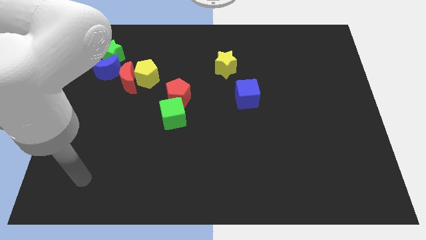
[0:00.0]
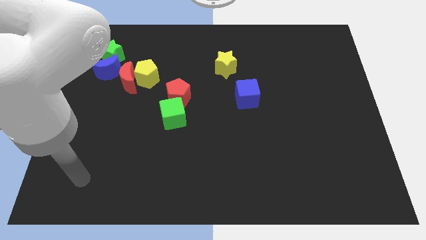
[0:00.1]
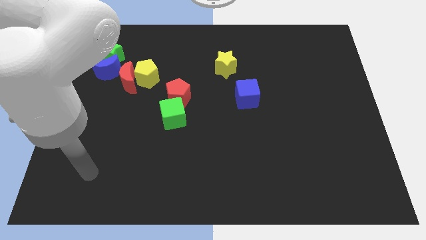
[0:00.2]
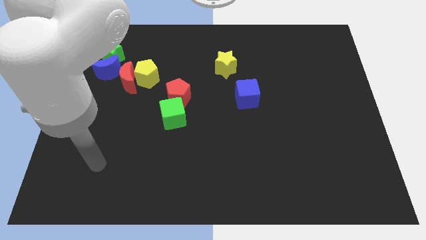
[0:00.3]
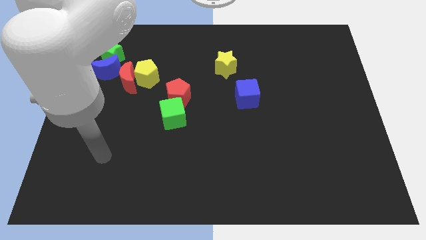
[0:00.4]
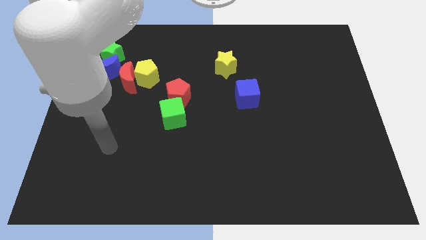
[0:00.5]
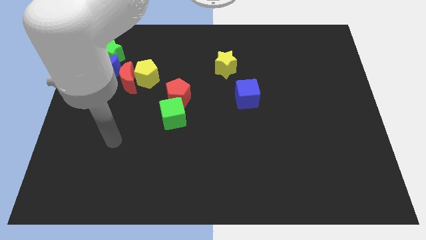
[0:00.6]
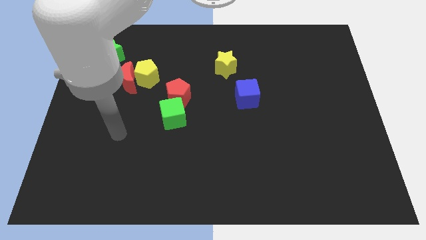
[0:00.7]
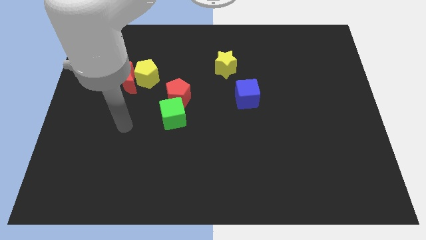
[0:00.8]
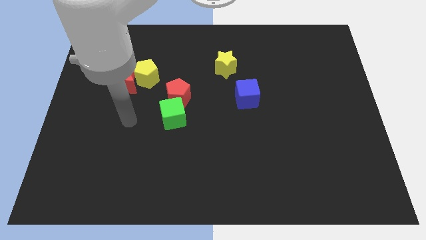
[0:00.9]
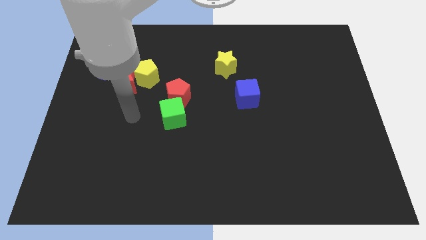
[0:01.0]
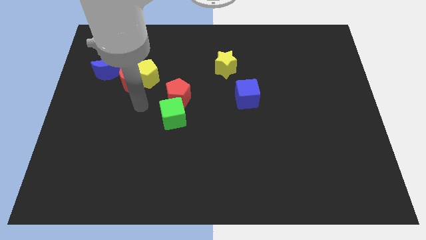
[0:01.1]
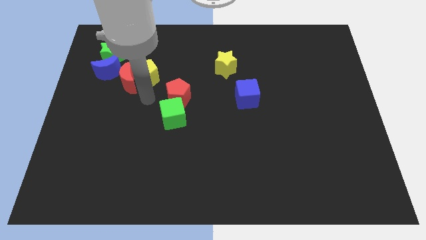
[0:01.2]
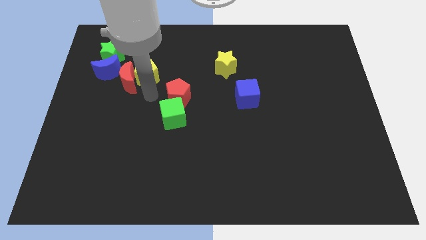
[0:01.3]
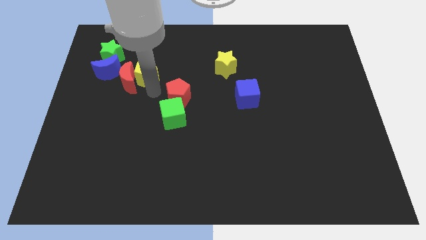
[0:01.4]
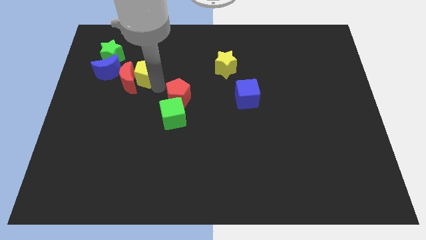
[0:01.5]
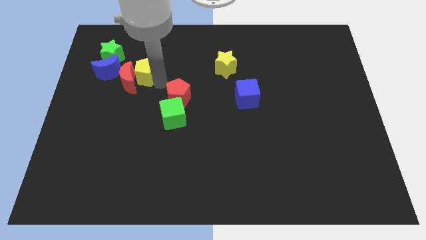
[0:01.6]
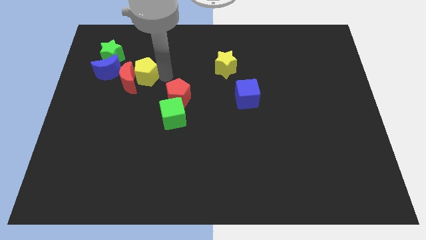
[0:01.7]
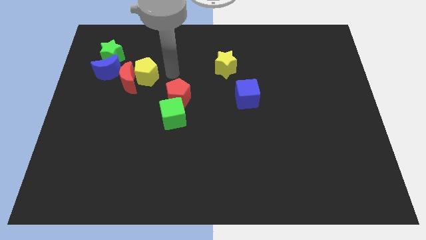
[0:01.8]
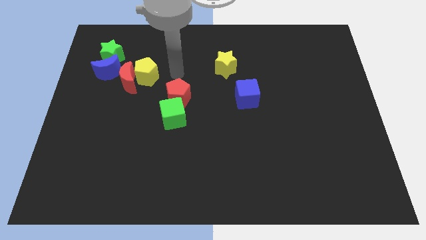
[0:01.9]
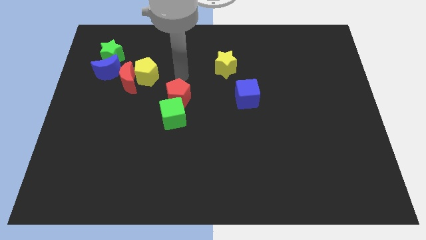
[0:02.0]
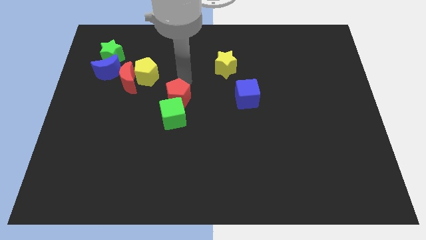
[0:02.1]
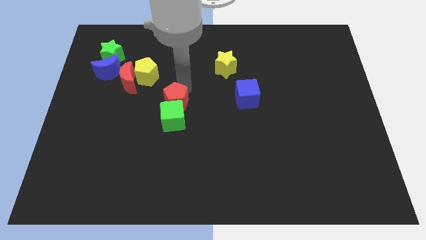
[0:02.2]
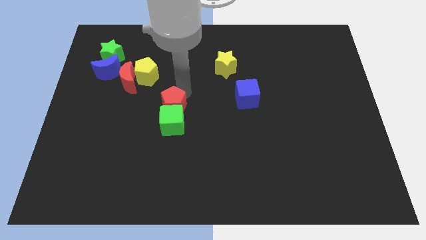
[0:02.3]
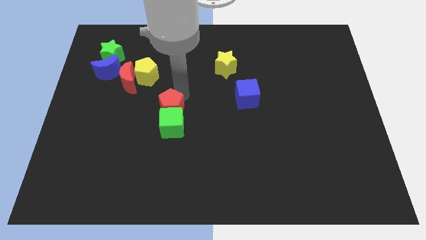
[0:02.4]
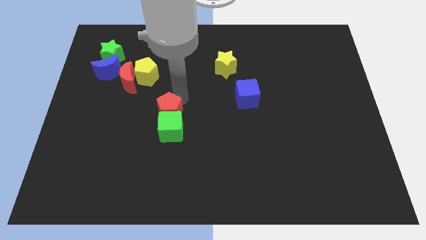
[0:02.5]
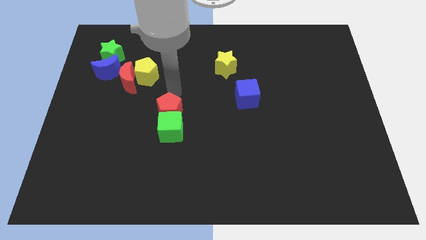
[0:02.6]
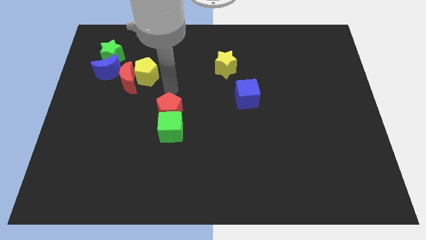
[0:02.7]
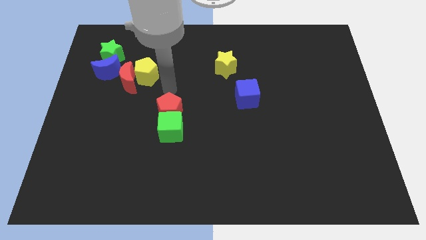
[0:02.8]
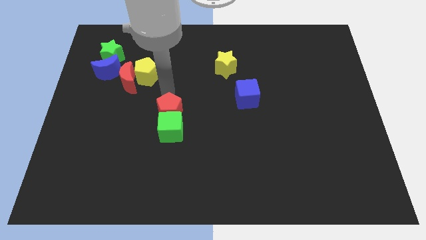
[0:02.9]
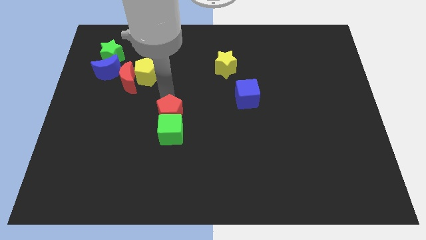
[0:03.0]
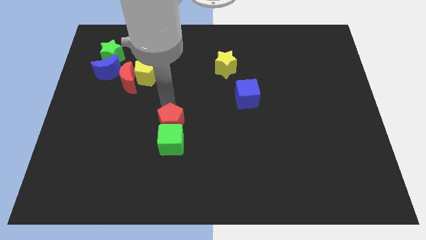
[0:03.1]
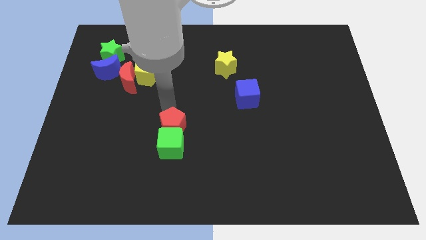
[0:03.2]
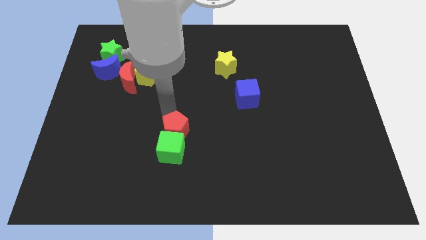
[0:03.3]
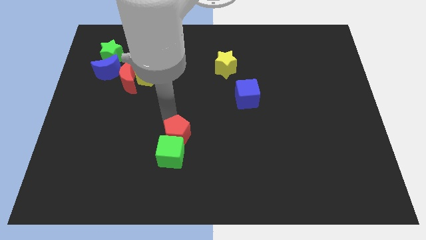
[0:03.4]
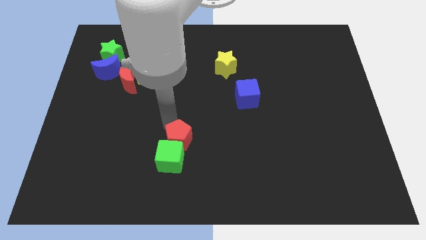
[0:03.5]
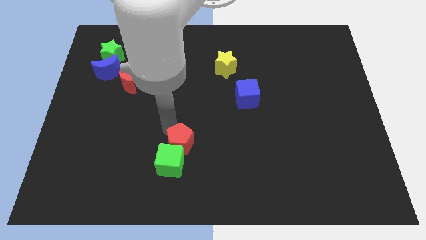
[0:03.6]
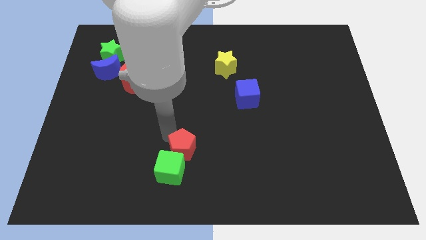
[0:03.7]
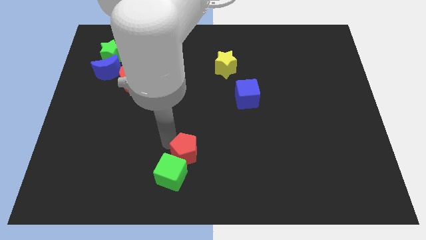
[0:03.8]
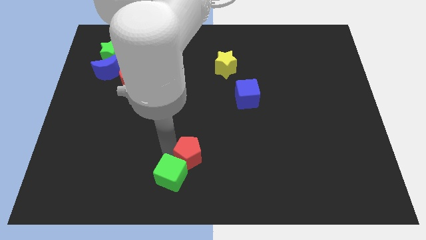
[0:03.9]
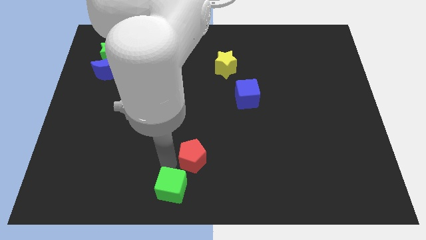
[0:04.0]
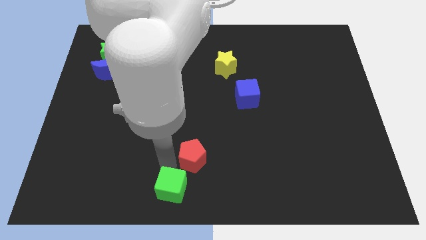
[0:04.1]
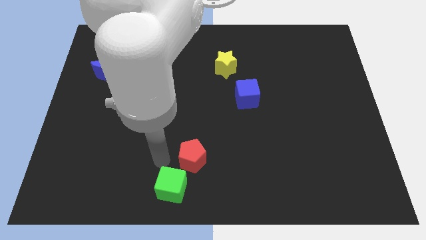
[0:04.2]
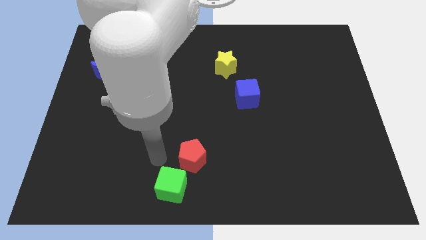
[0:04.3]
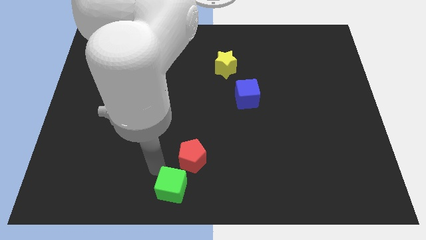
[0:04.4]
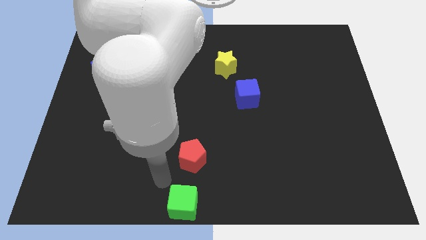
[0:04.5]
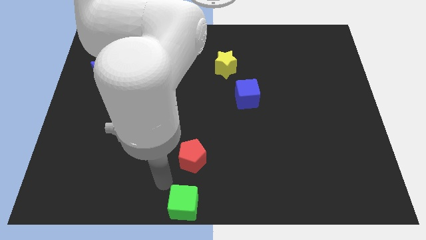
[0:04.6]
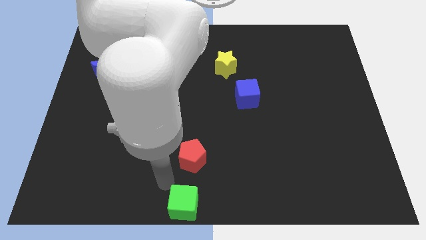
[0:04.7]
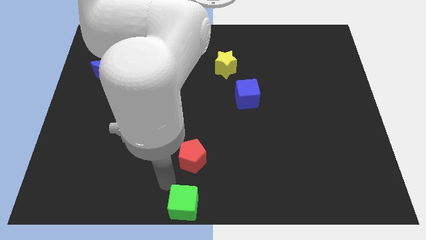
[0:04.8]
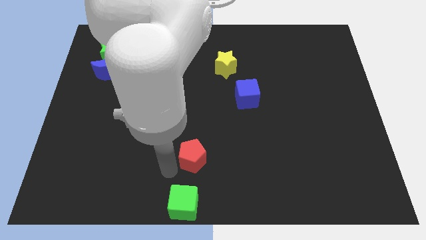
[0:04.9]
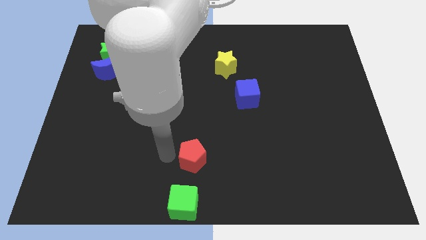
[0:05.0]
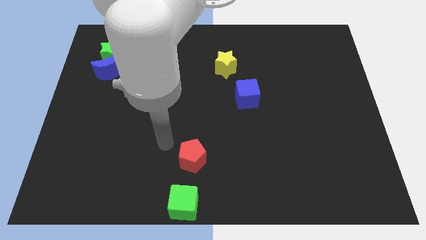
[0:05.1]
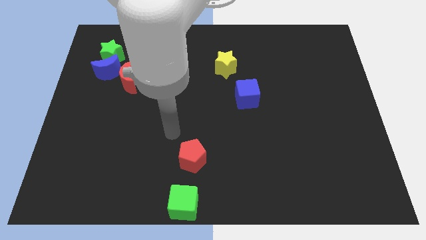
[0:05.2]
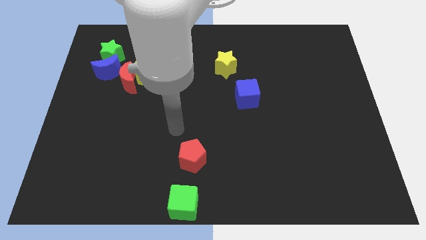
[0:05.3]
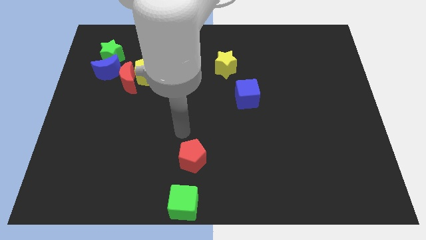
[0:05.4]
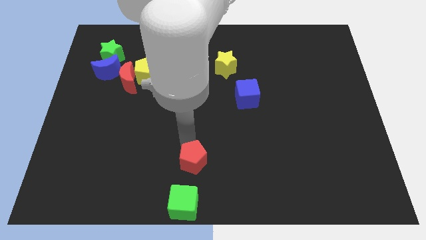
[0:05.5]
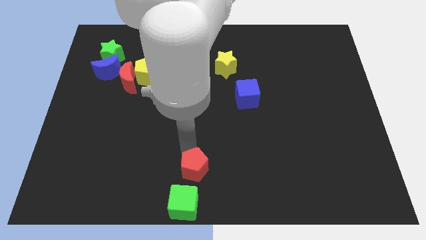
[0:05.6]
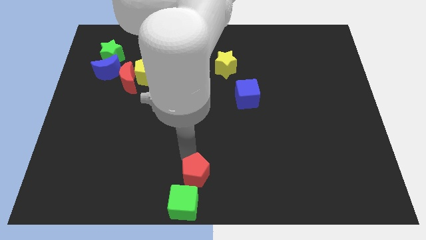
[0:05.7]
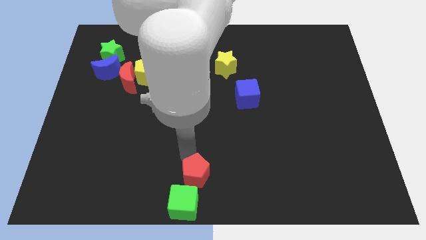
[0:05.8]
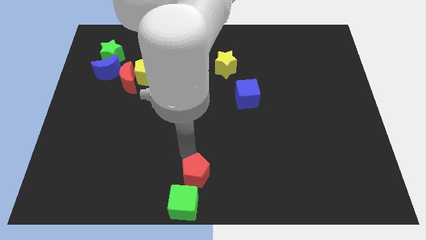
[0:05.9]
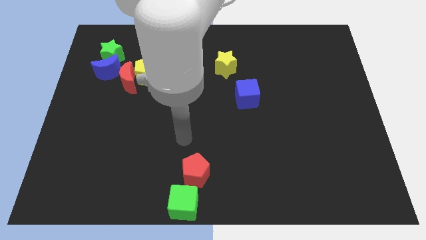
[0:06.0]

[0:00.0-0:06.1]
push the red pentagon and green cube to the bottom centre of the board

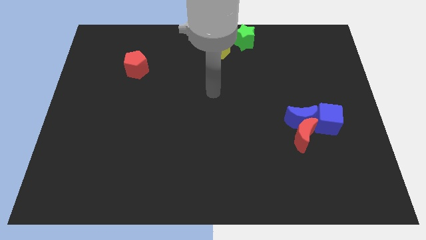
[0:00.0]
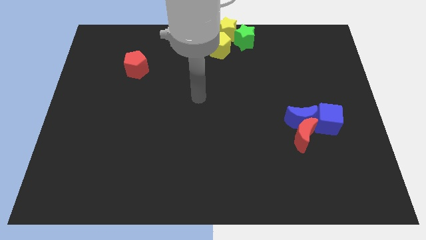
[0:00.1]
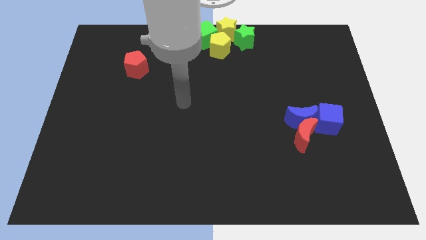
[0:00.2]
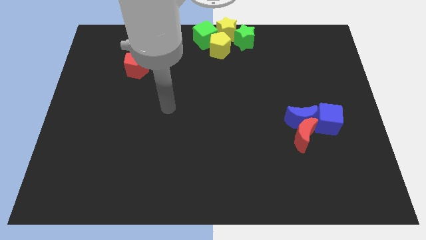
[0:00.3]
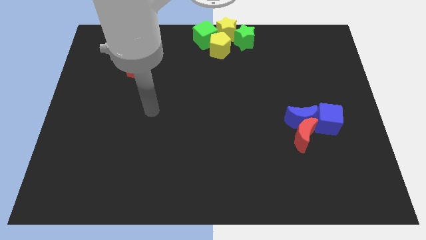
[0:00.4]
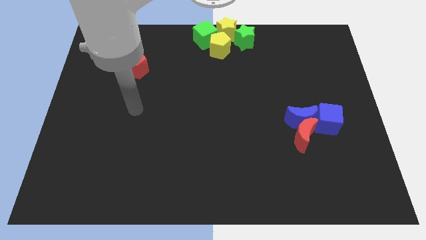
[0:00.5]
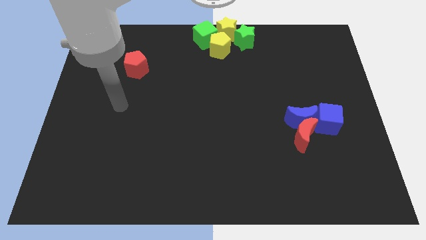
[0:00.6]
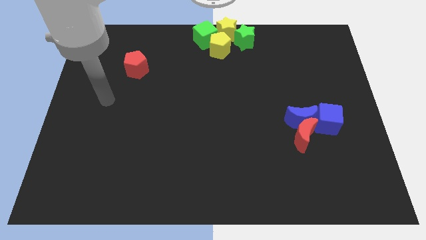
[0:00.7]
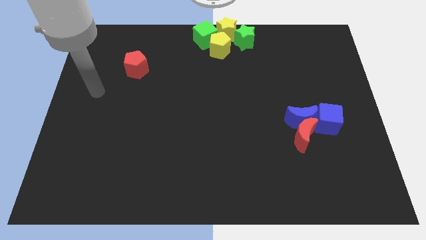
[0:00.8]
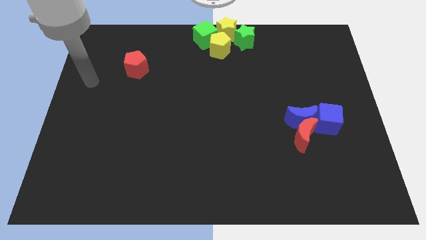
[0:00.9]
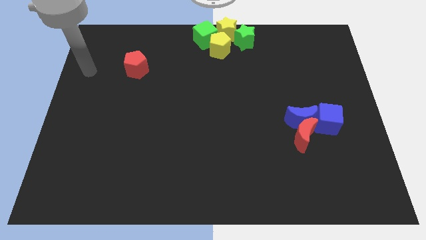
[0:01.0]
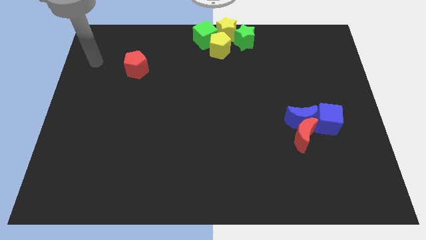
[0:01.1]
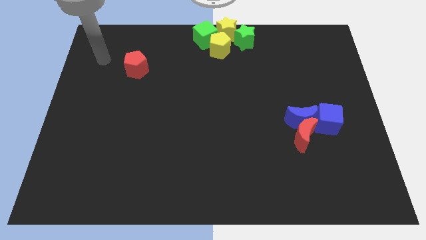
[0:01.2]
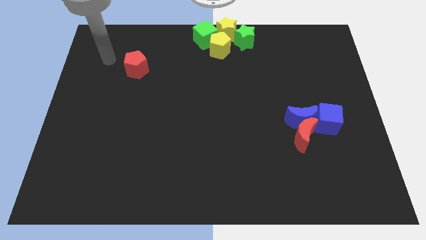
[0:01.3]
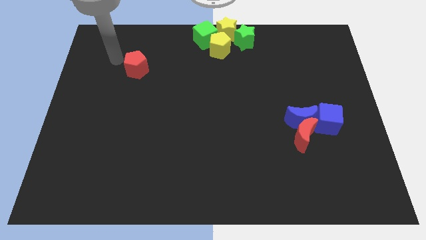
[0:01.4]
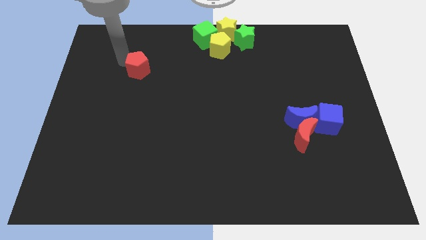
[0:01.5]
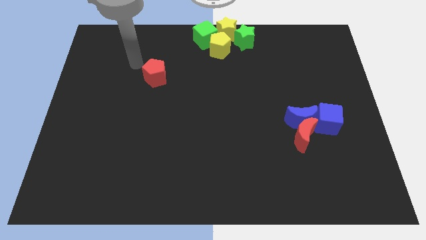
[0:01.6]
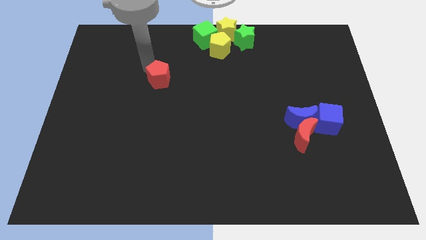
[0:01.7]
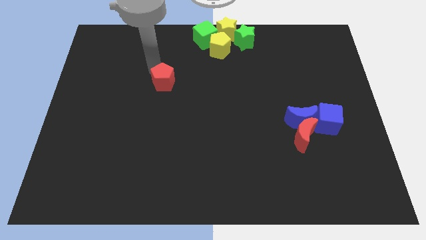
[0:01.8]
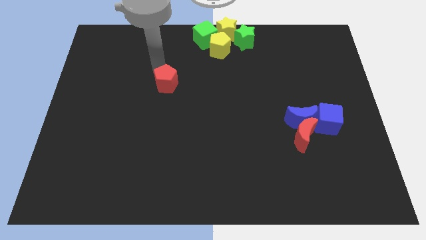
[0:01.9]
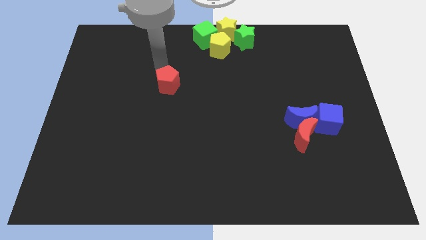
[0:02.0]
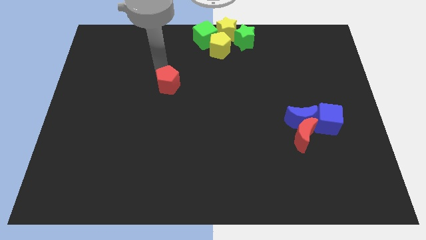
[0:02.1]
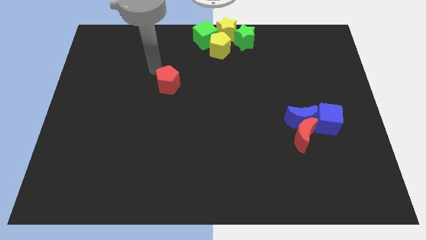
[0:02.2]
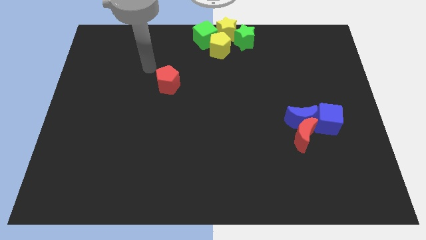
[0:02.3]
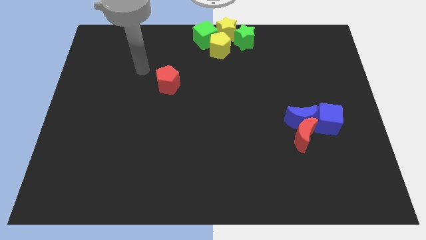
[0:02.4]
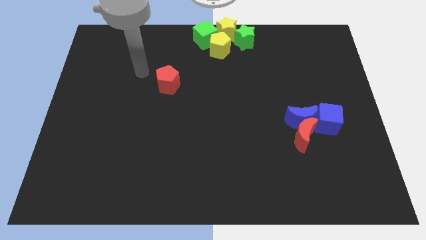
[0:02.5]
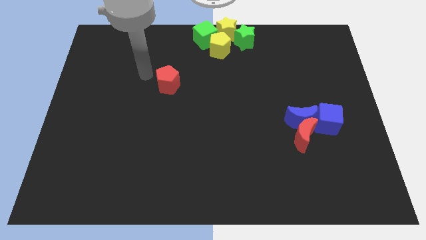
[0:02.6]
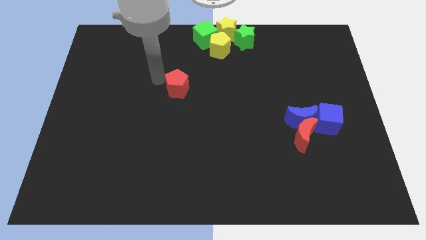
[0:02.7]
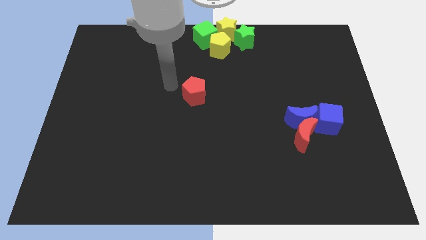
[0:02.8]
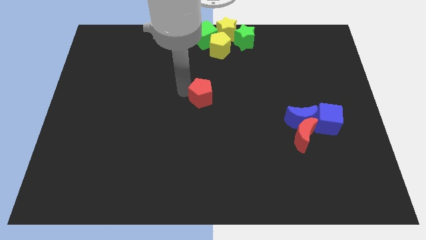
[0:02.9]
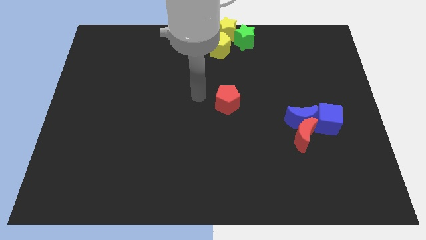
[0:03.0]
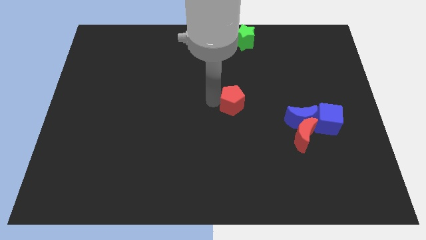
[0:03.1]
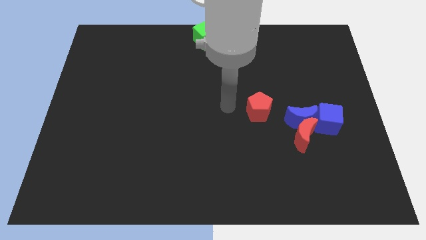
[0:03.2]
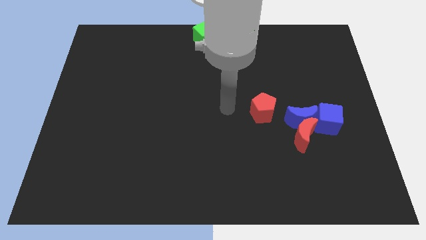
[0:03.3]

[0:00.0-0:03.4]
push the red pentagon towards the center of the board
